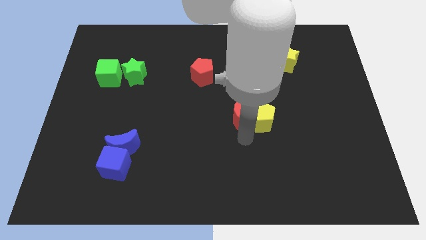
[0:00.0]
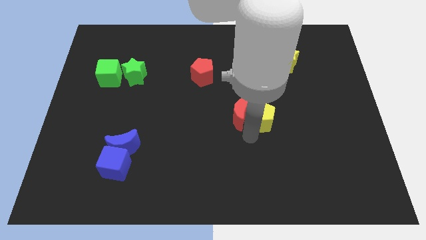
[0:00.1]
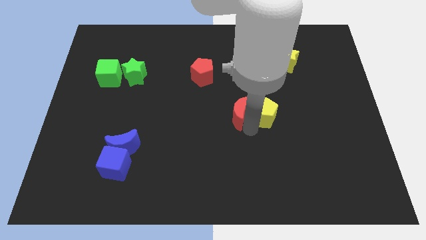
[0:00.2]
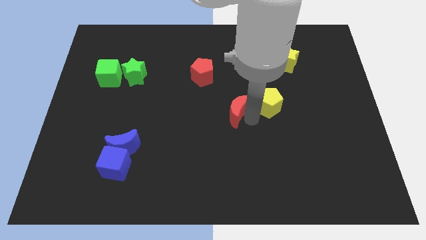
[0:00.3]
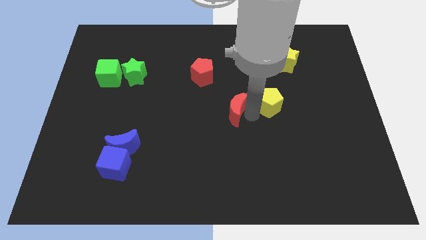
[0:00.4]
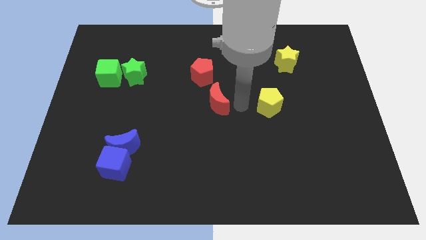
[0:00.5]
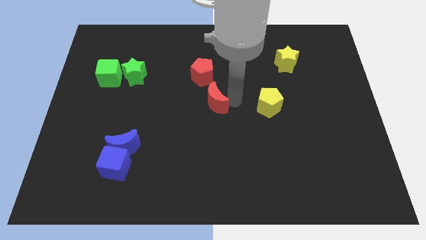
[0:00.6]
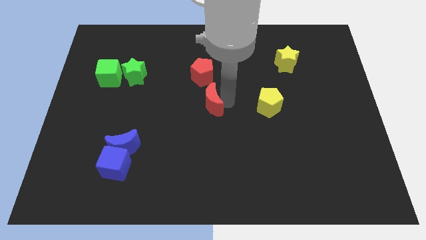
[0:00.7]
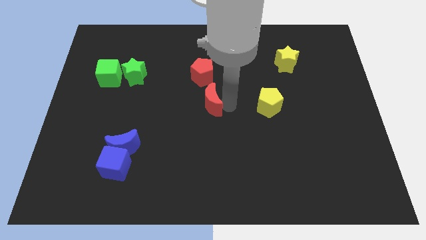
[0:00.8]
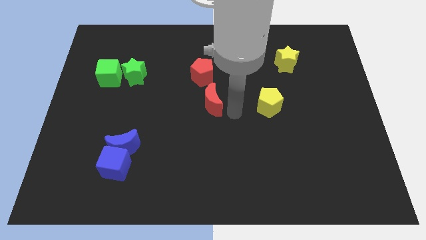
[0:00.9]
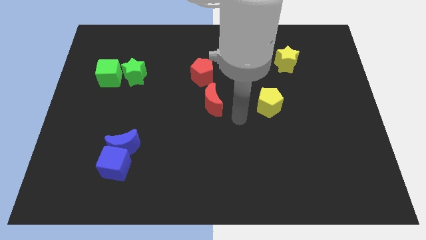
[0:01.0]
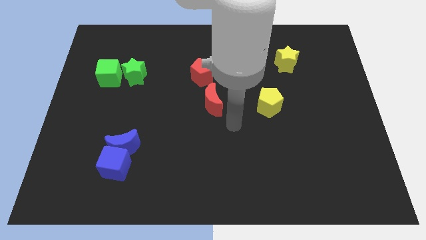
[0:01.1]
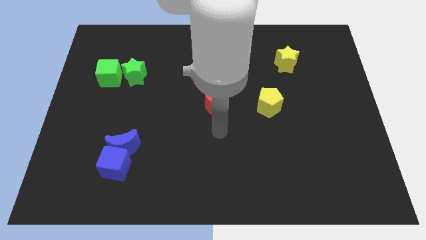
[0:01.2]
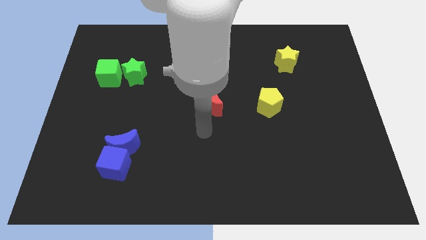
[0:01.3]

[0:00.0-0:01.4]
place the red crescent to the bottom of the red pentagon

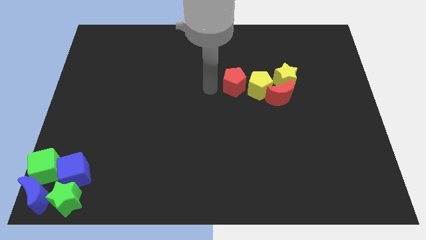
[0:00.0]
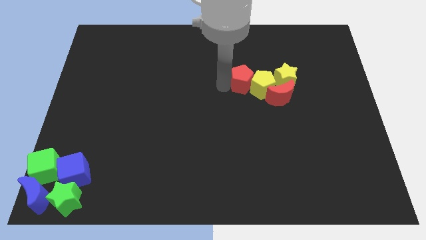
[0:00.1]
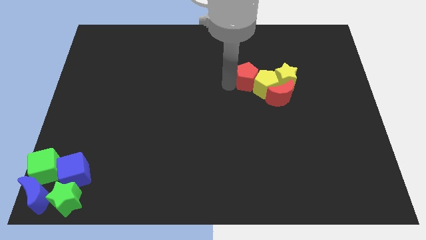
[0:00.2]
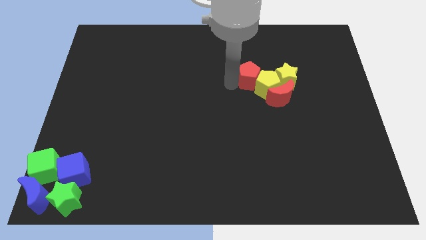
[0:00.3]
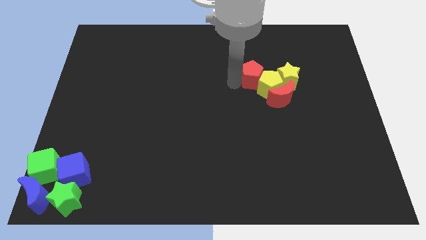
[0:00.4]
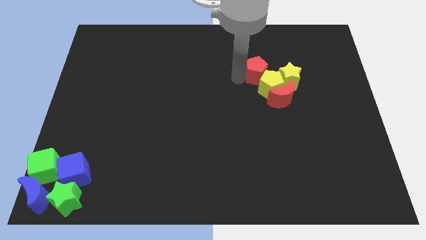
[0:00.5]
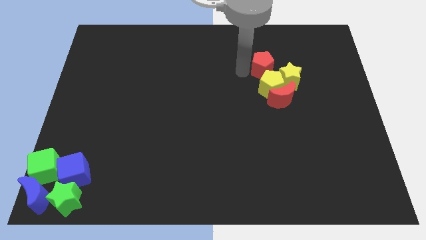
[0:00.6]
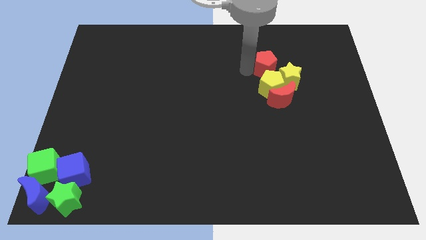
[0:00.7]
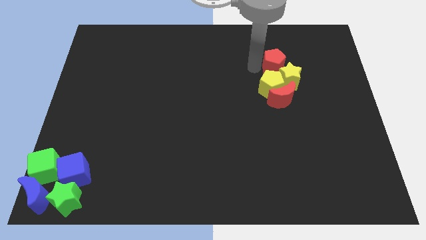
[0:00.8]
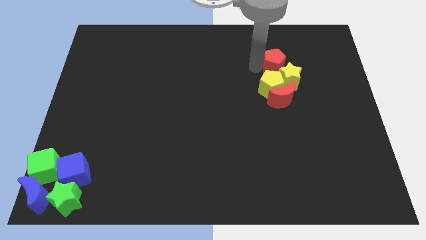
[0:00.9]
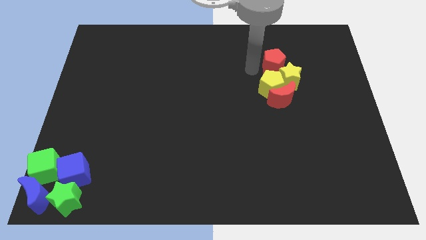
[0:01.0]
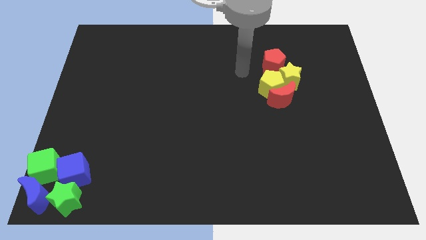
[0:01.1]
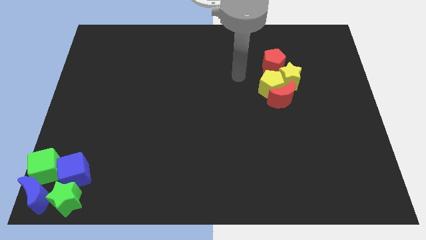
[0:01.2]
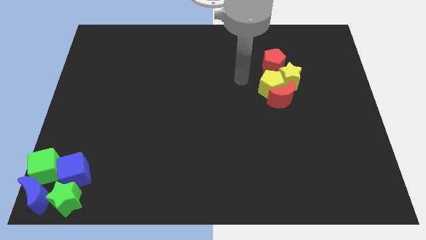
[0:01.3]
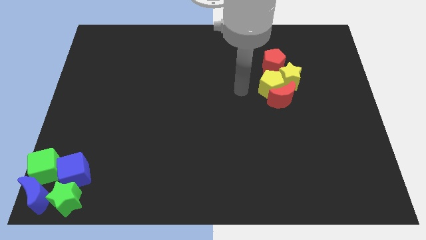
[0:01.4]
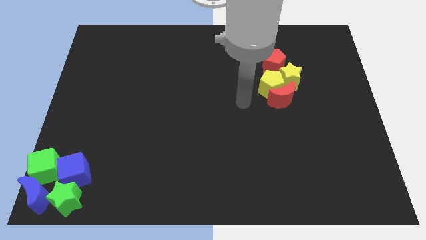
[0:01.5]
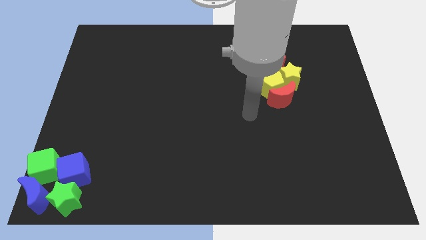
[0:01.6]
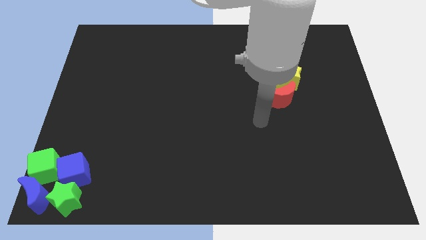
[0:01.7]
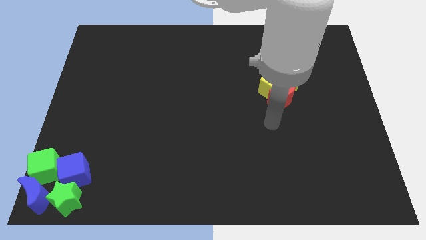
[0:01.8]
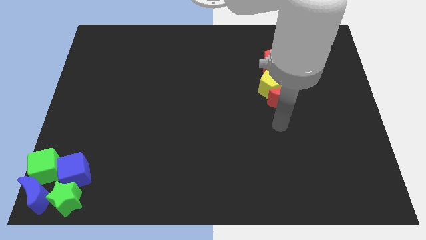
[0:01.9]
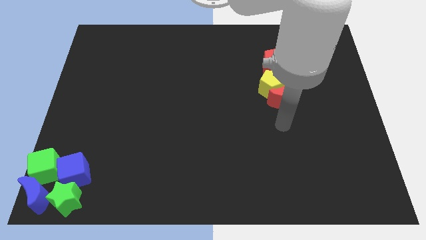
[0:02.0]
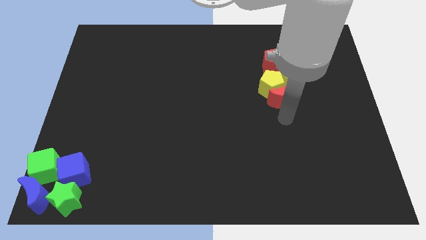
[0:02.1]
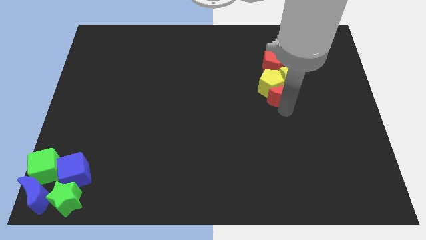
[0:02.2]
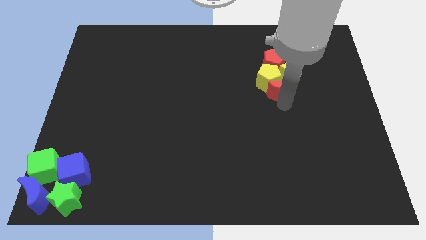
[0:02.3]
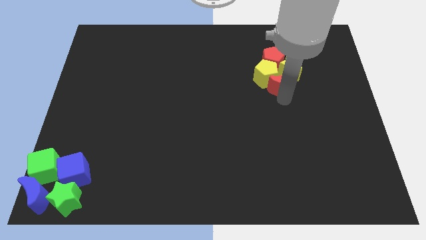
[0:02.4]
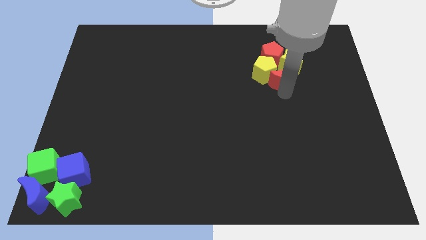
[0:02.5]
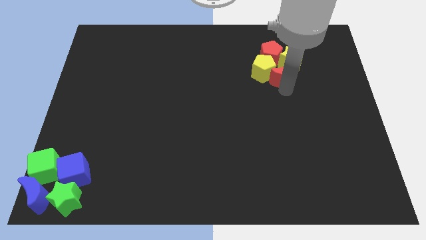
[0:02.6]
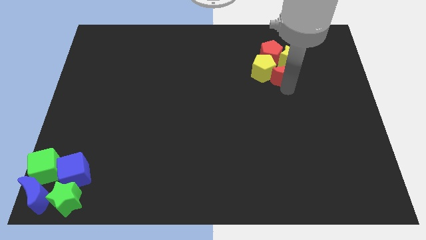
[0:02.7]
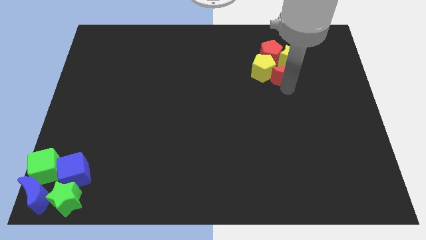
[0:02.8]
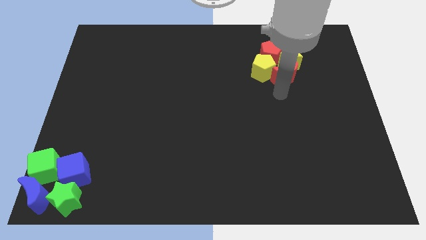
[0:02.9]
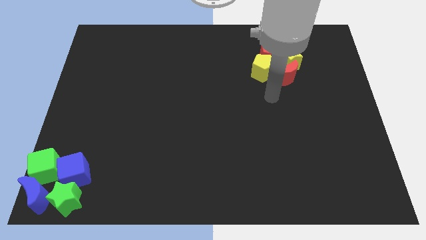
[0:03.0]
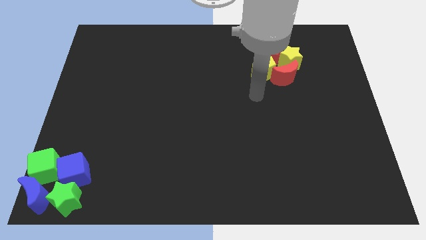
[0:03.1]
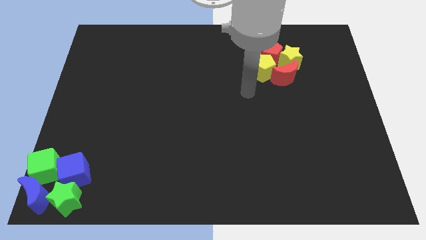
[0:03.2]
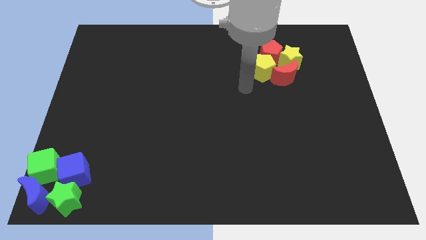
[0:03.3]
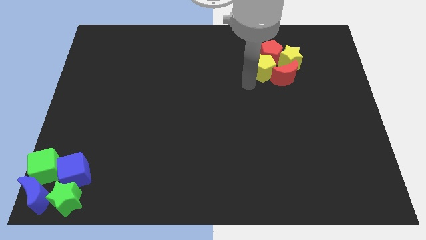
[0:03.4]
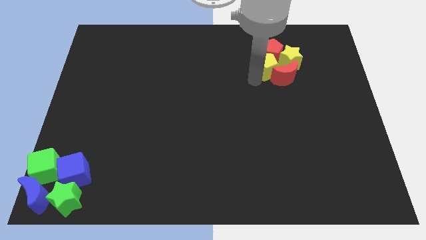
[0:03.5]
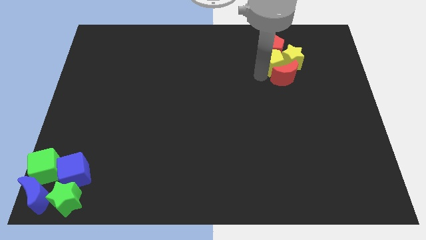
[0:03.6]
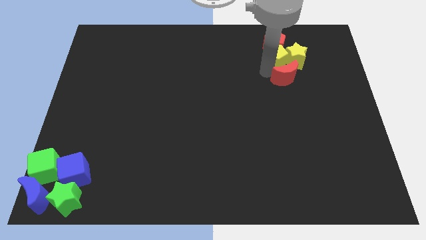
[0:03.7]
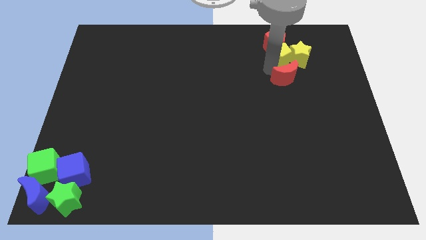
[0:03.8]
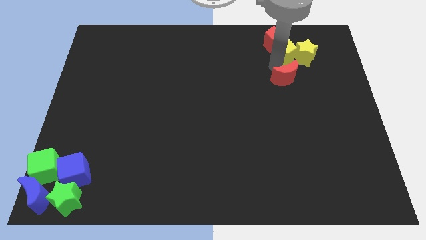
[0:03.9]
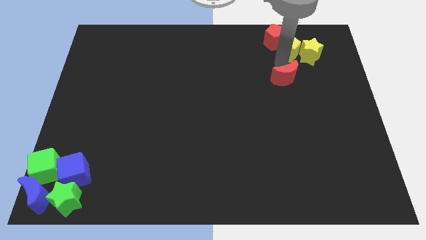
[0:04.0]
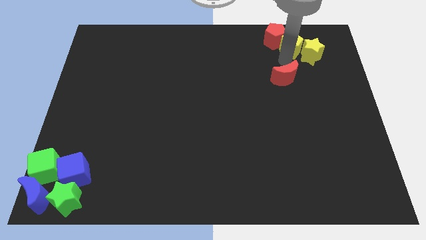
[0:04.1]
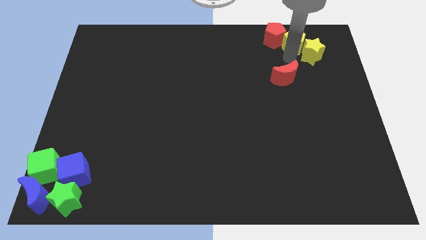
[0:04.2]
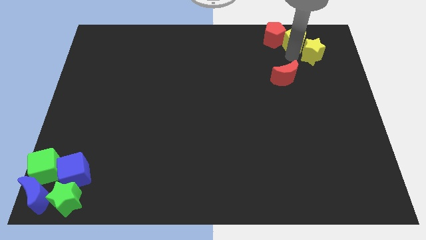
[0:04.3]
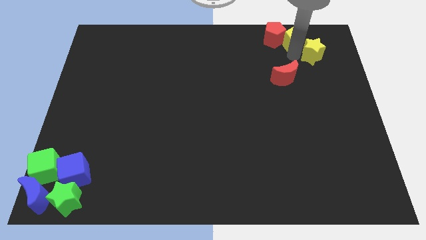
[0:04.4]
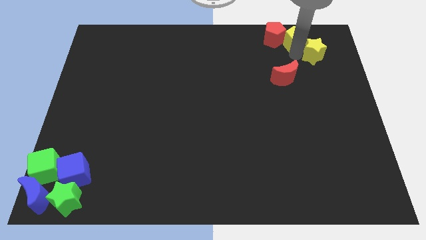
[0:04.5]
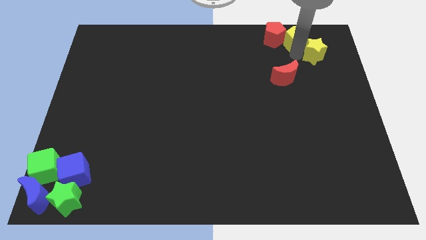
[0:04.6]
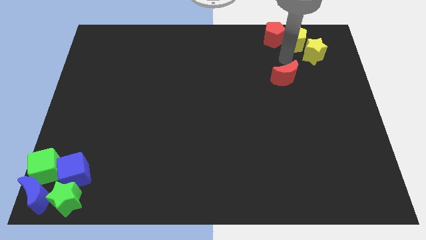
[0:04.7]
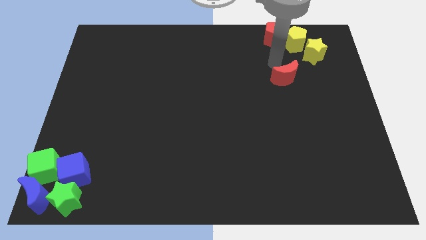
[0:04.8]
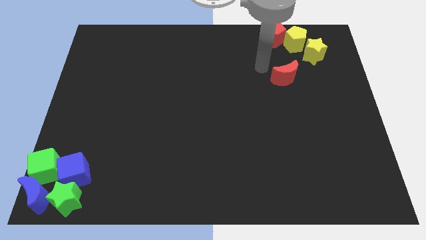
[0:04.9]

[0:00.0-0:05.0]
move yellow blocks along with red blocks to the top right

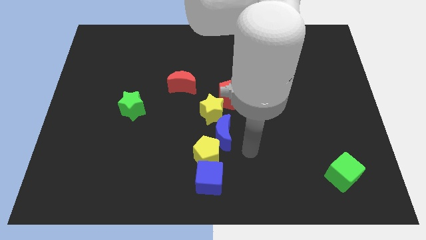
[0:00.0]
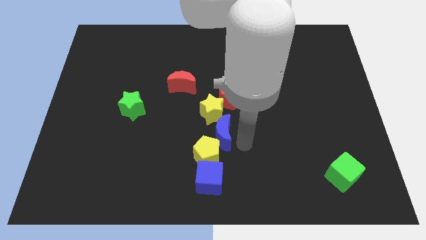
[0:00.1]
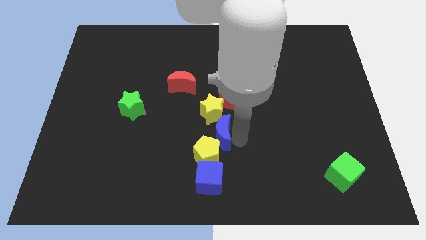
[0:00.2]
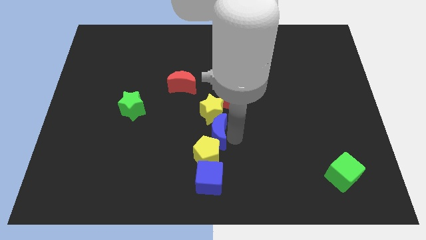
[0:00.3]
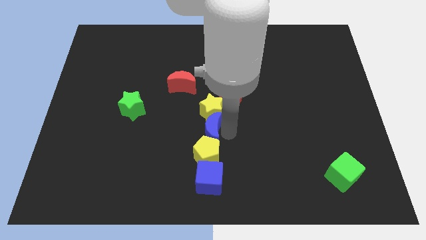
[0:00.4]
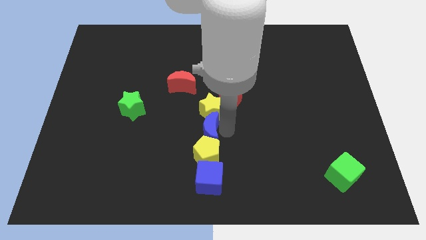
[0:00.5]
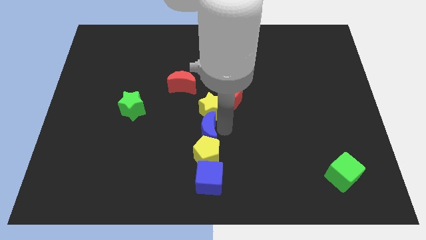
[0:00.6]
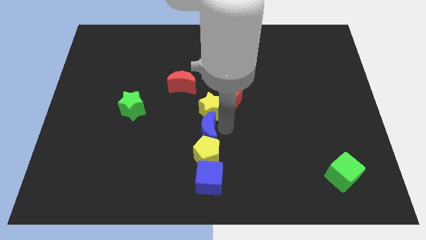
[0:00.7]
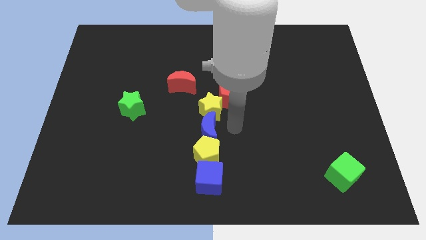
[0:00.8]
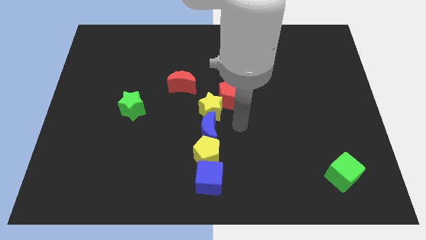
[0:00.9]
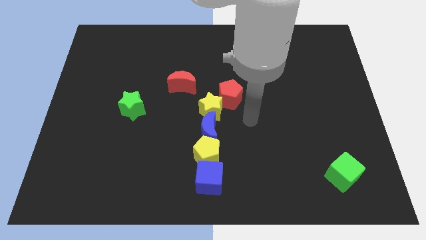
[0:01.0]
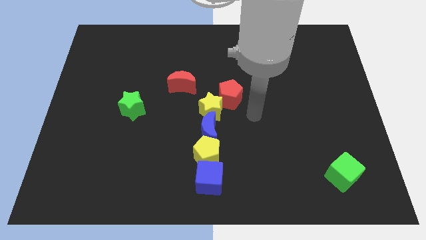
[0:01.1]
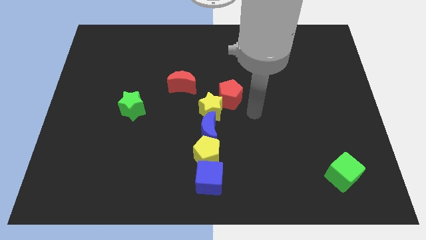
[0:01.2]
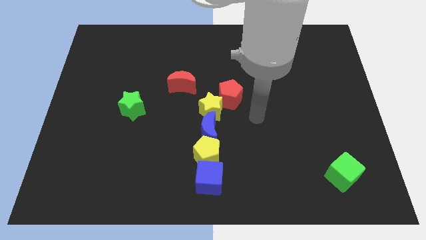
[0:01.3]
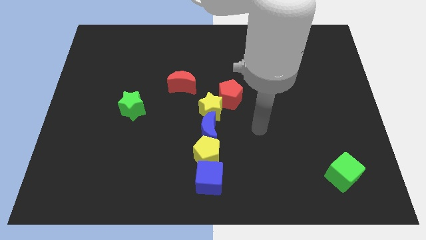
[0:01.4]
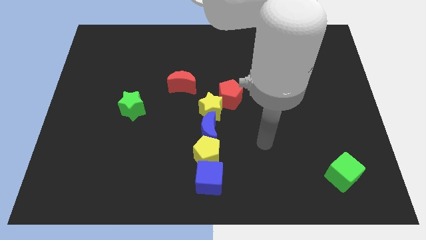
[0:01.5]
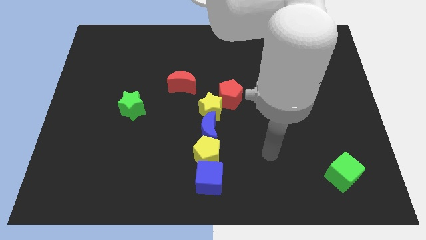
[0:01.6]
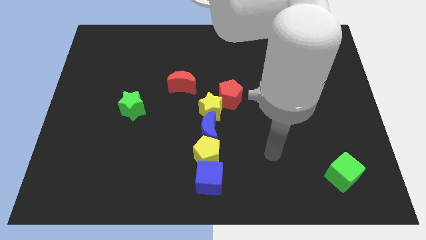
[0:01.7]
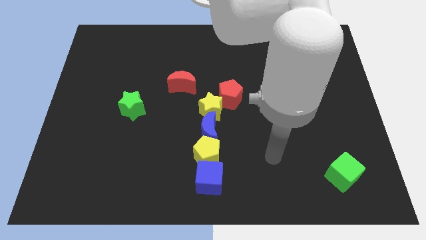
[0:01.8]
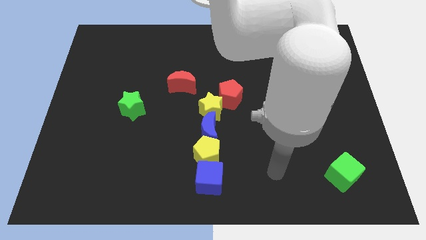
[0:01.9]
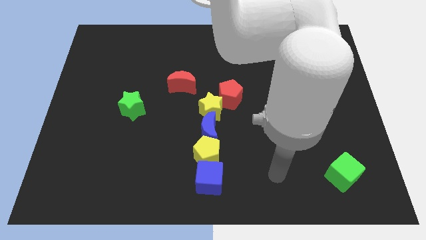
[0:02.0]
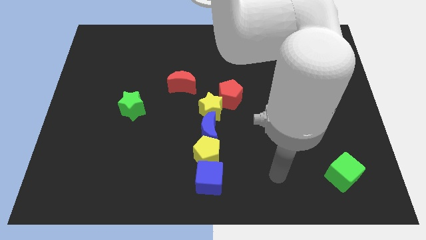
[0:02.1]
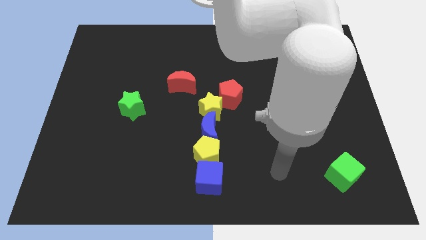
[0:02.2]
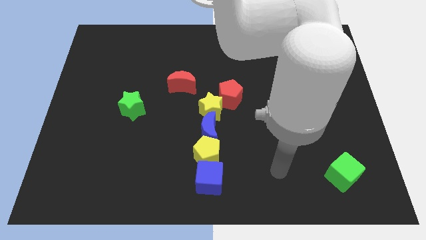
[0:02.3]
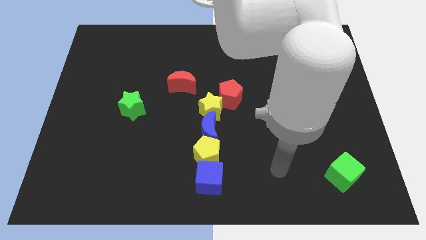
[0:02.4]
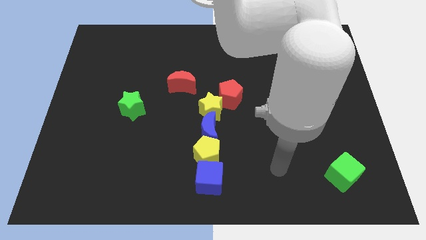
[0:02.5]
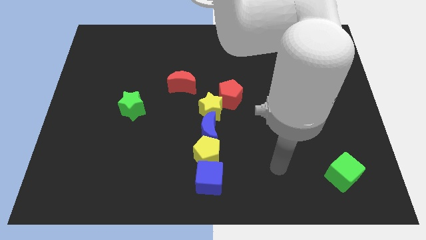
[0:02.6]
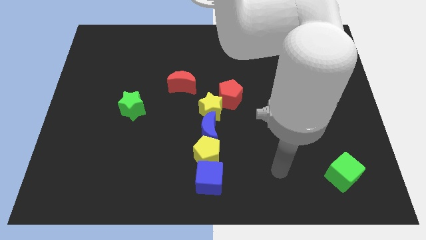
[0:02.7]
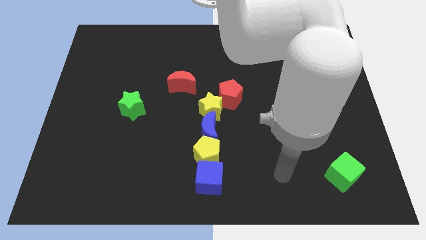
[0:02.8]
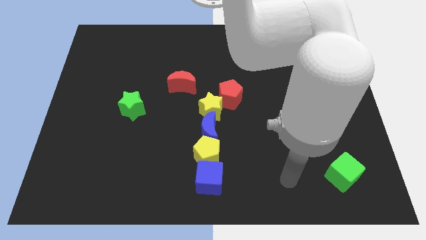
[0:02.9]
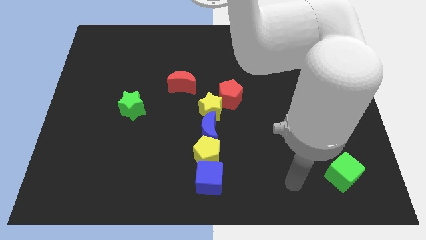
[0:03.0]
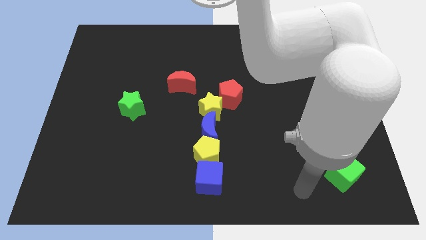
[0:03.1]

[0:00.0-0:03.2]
place blue moon on top of yellow pentagon
